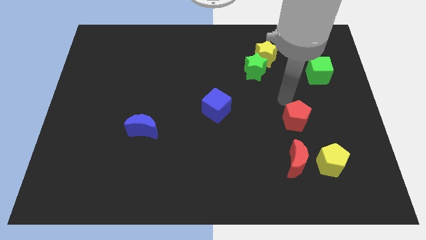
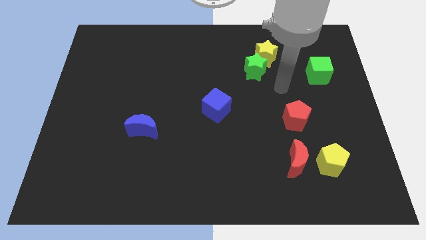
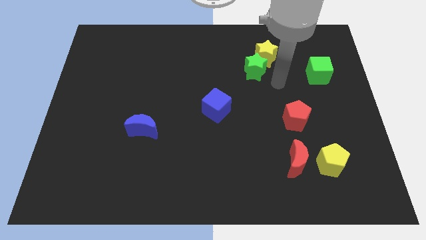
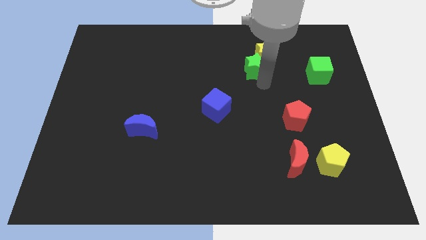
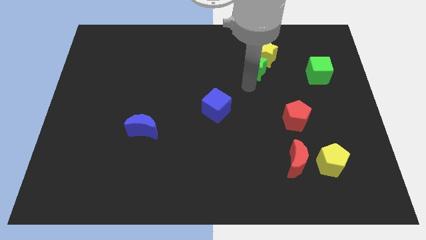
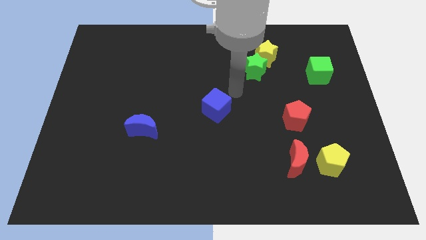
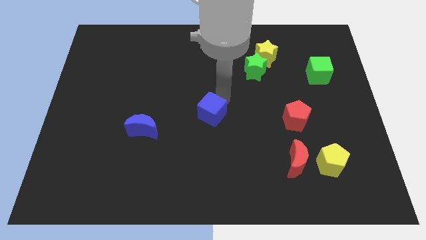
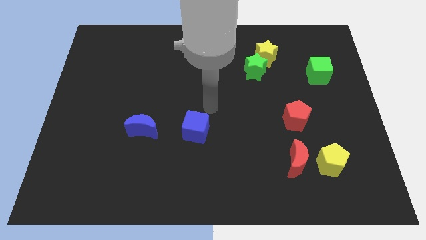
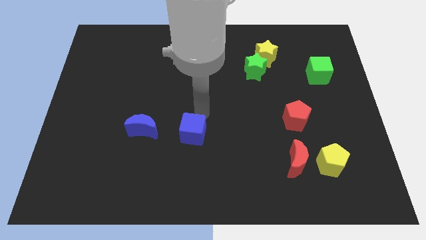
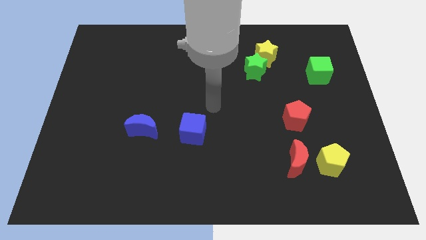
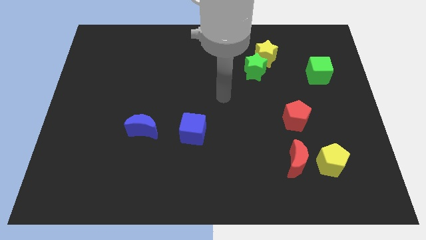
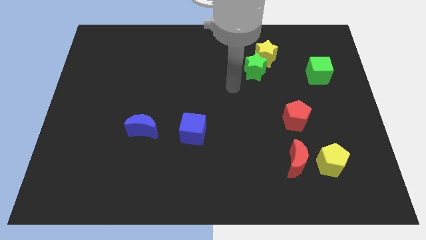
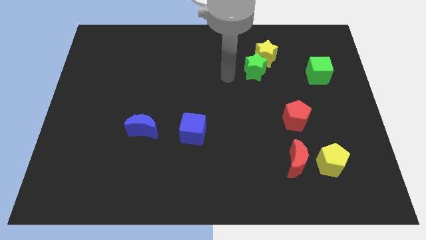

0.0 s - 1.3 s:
move the blue cube right to the blue moon

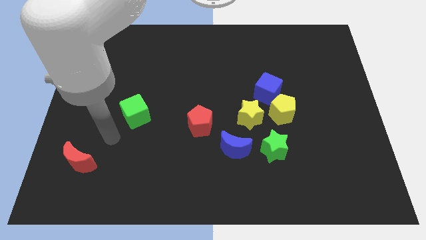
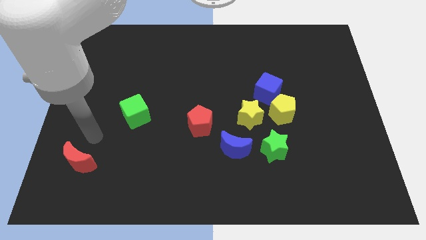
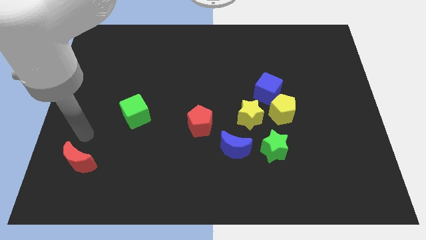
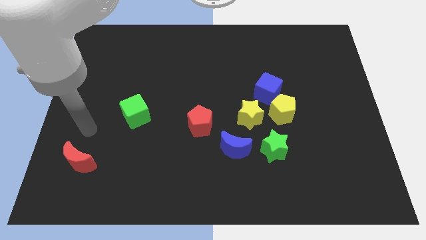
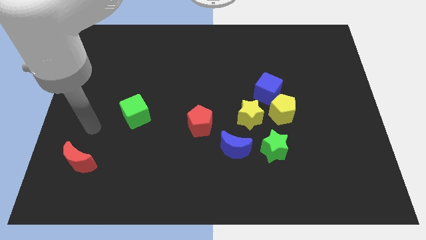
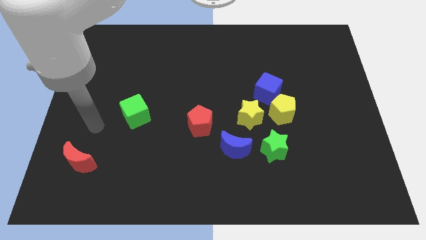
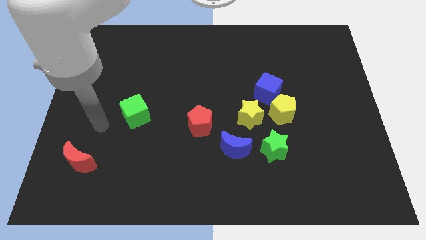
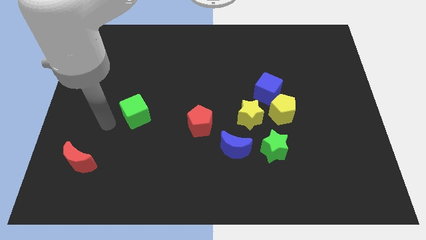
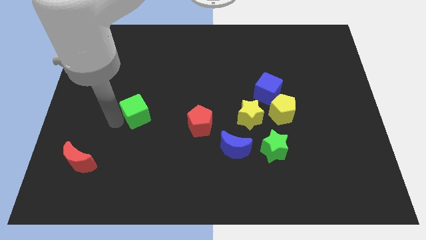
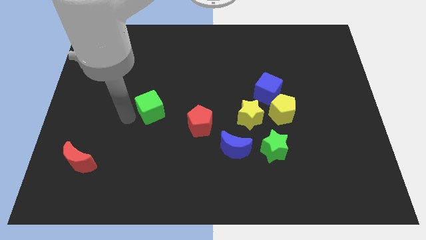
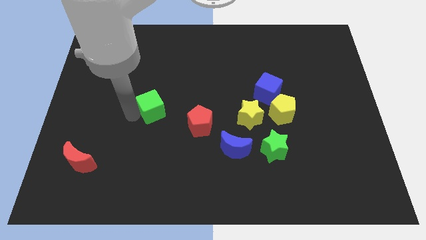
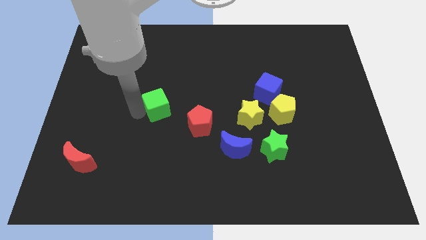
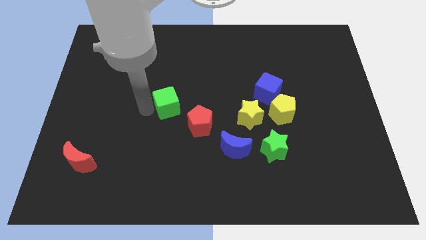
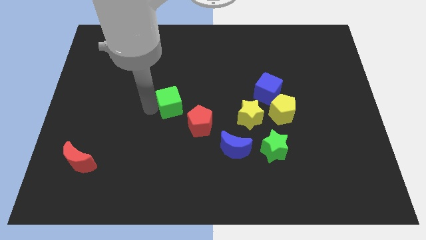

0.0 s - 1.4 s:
move the green cube to the right of the board

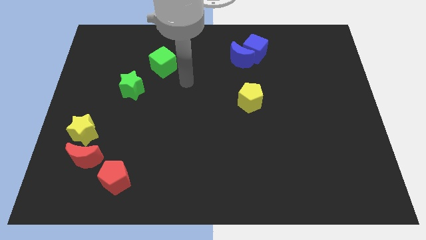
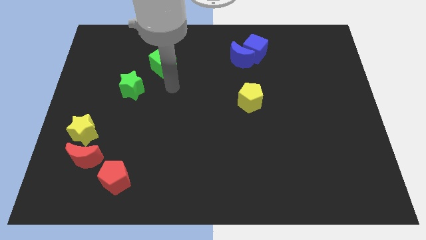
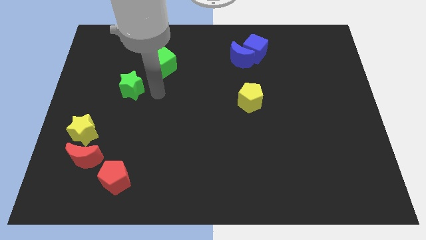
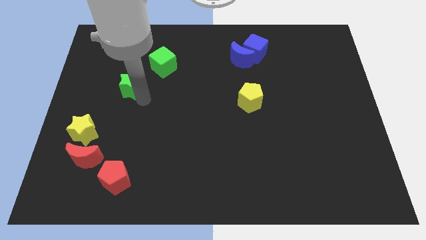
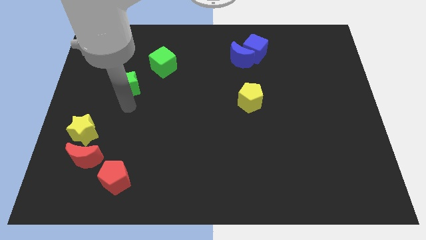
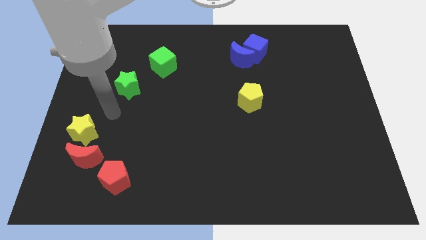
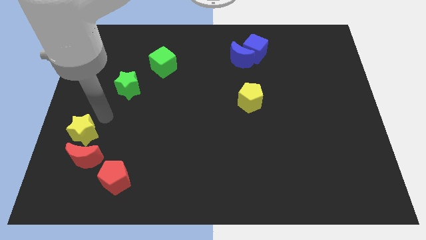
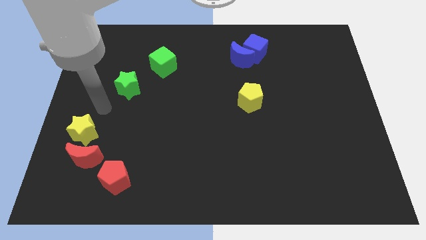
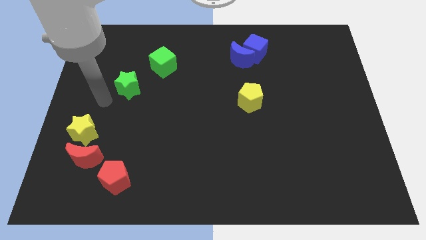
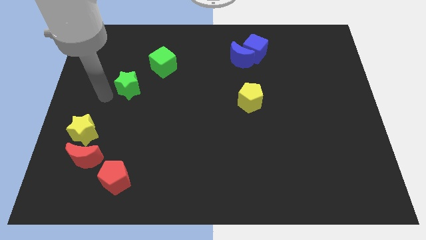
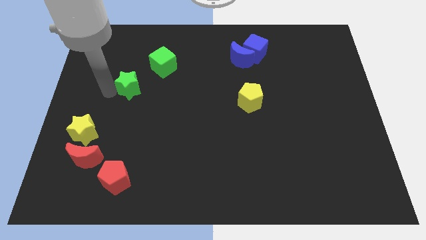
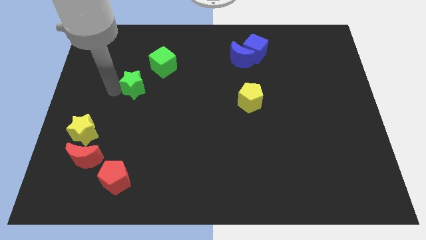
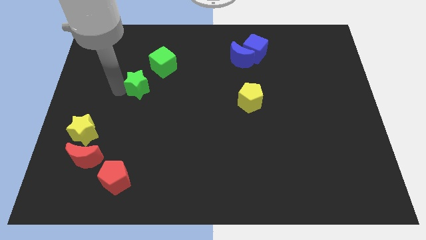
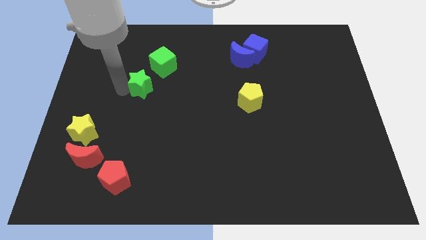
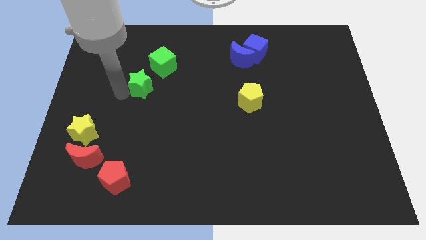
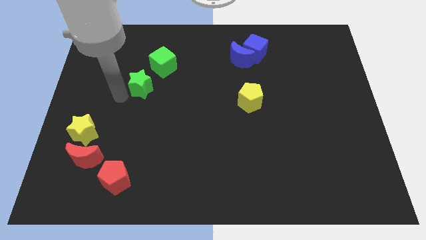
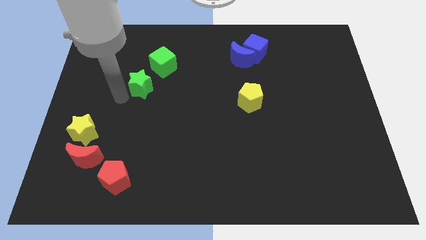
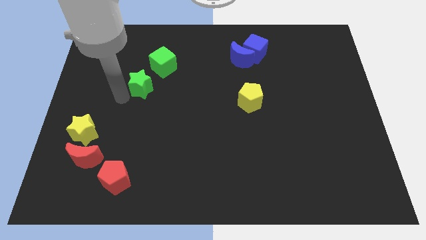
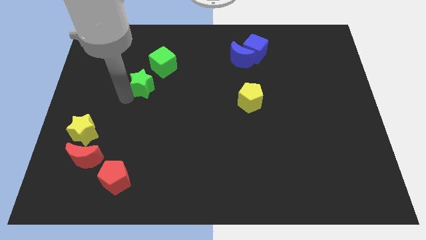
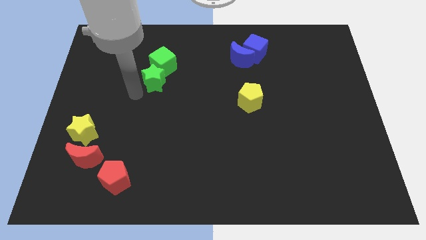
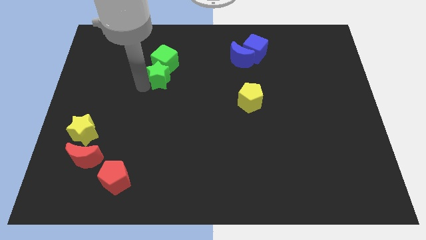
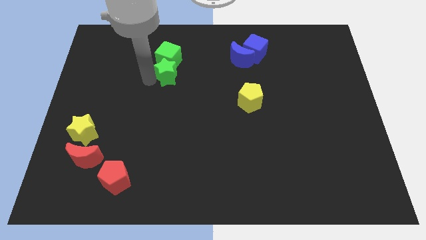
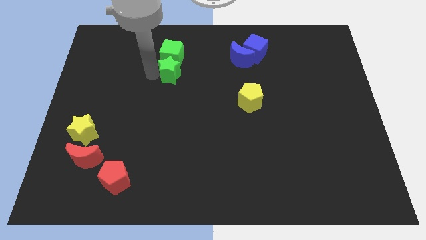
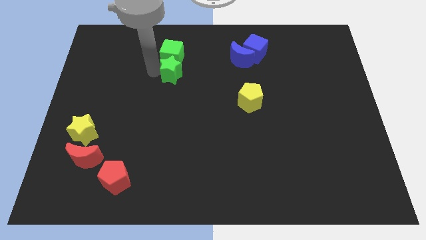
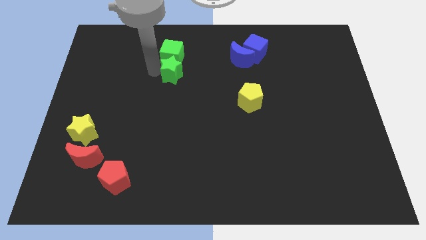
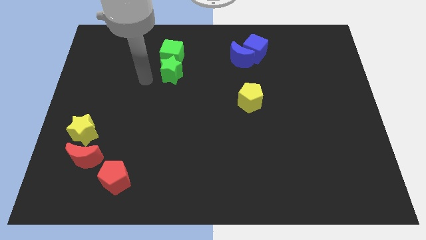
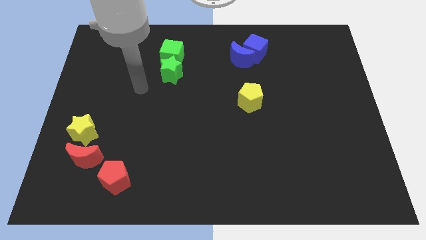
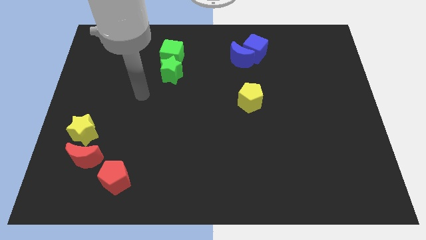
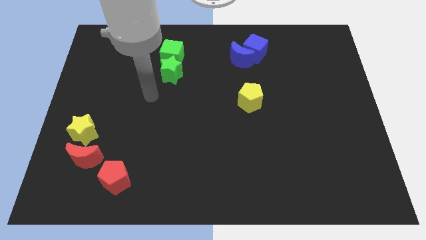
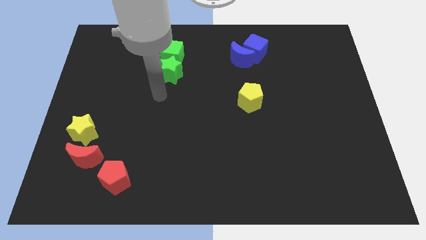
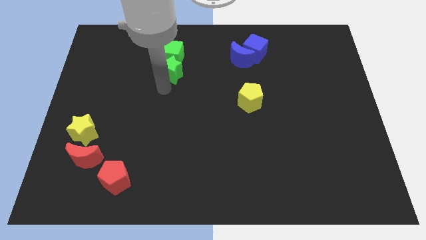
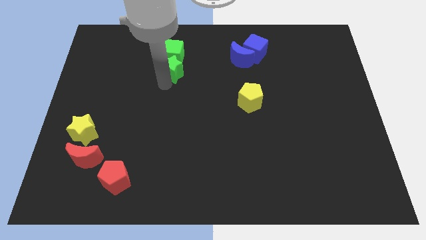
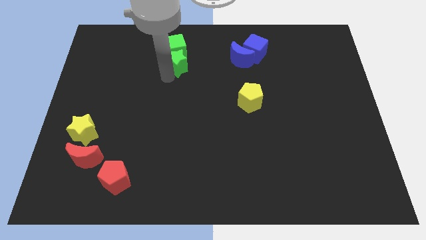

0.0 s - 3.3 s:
place green star the bottom of green cube

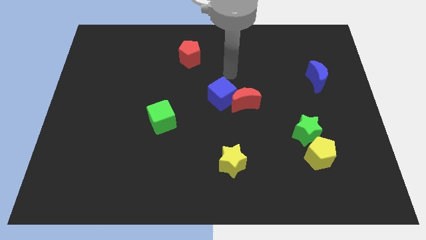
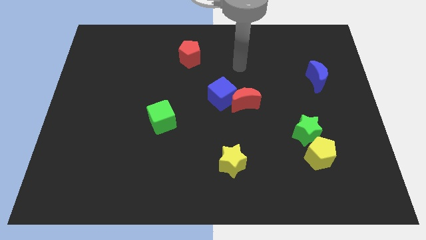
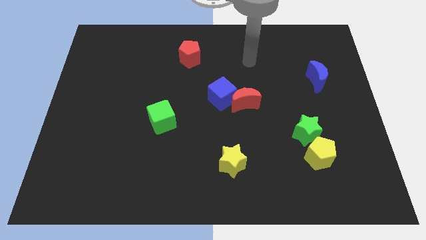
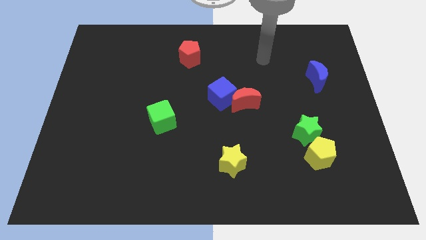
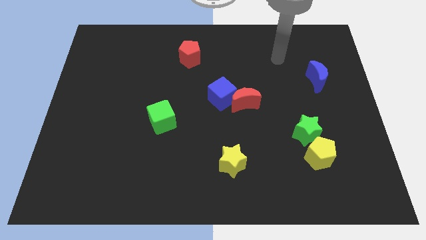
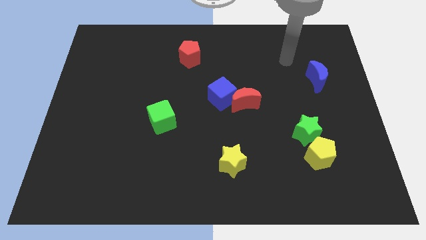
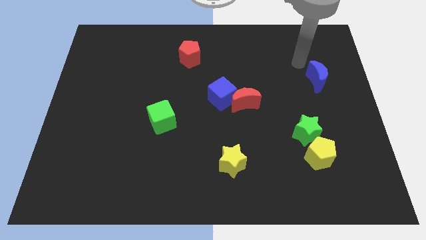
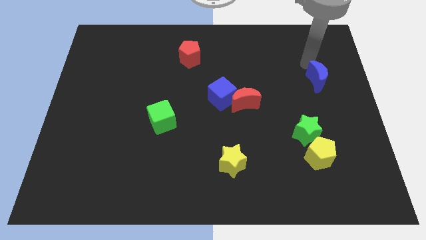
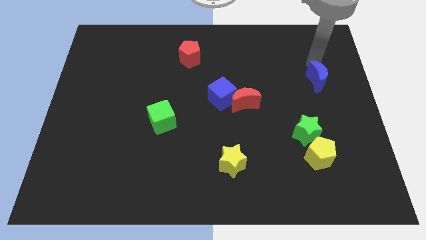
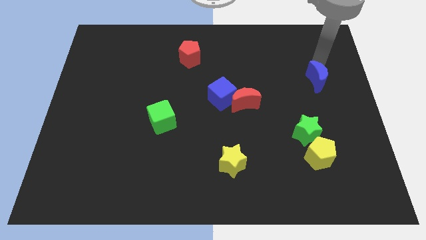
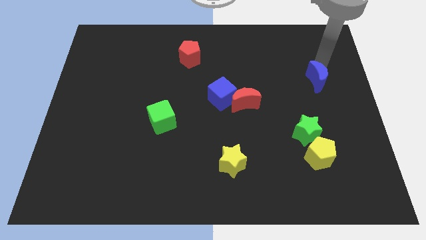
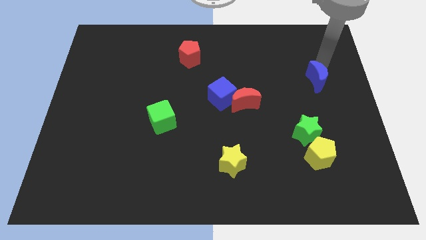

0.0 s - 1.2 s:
place your hand close to blue crescent

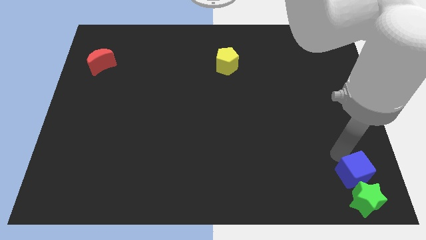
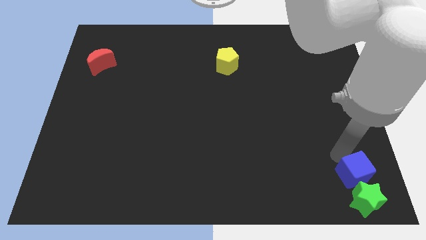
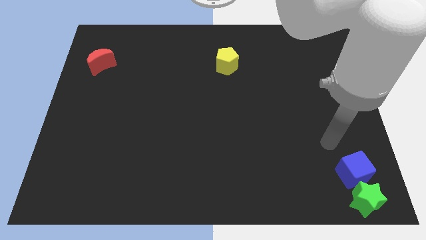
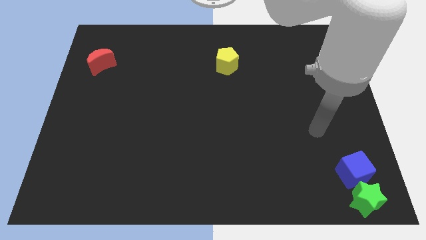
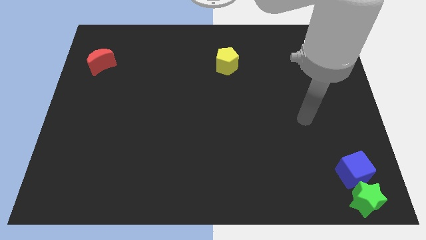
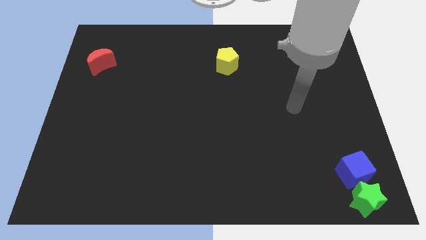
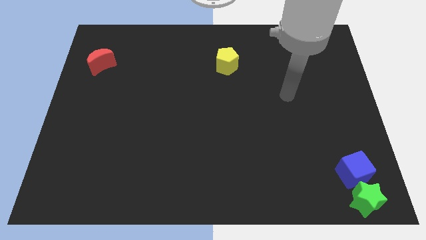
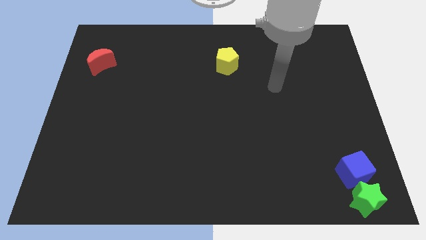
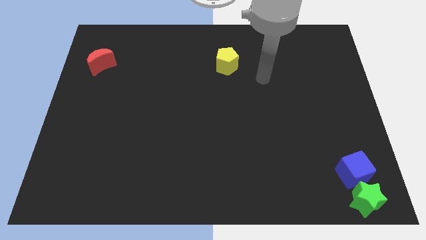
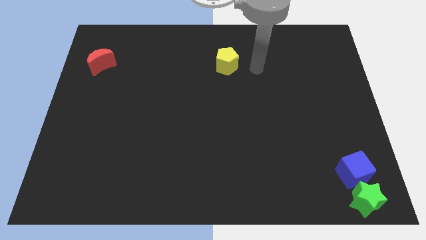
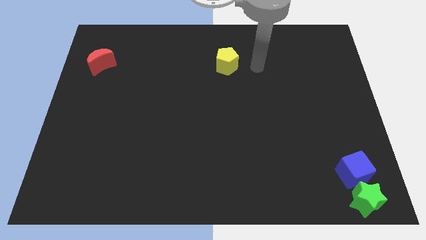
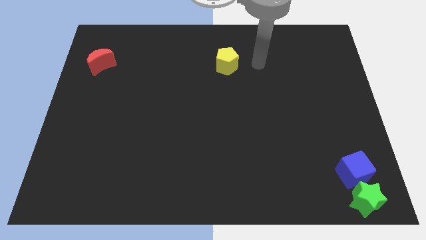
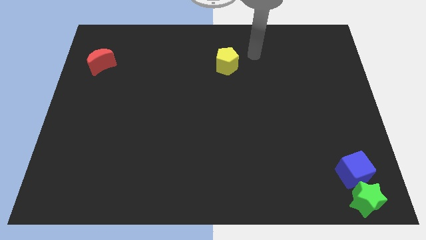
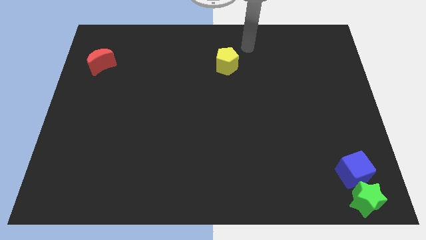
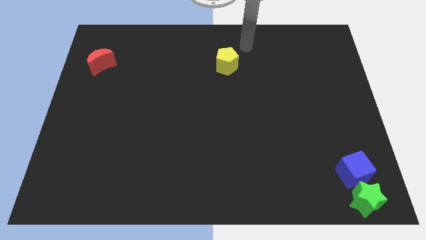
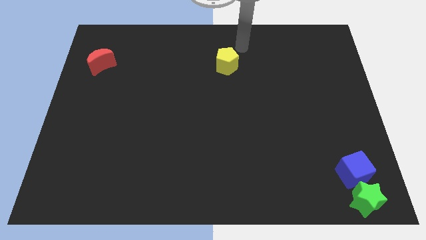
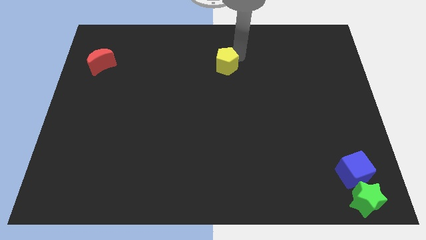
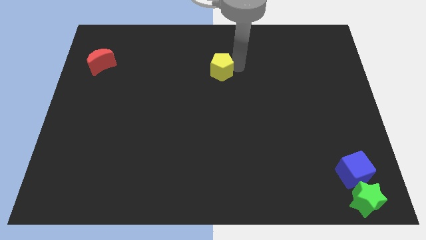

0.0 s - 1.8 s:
tap the right side of the yellow pentagon
